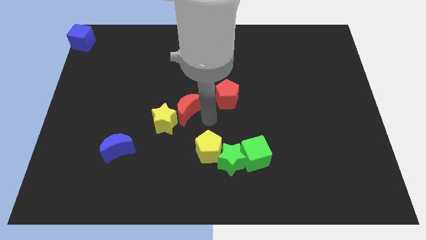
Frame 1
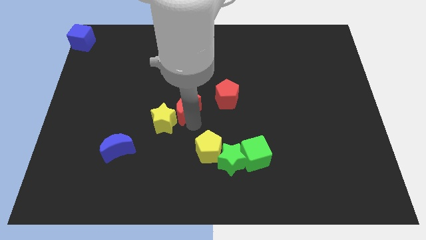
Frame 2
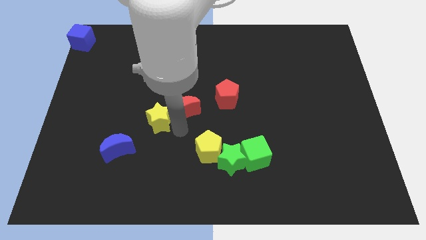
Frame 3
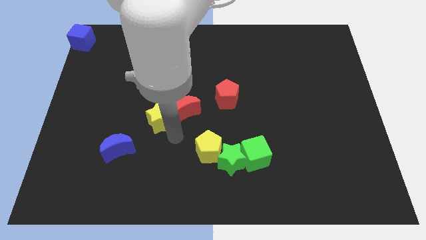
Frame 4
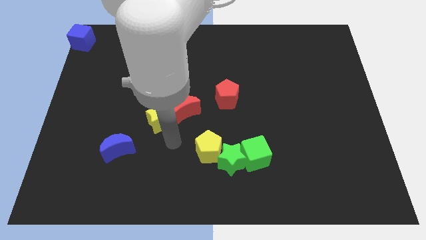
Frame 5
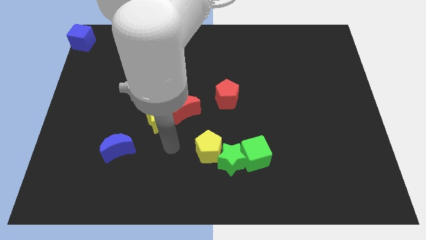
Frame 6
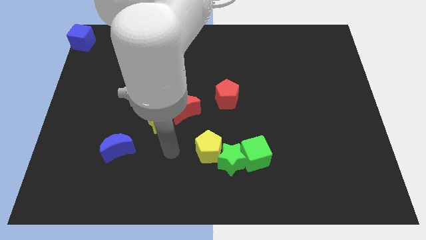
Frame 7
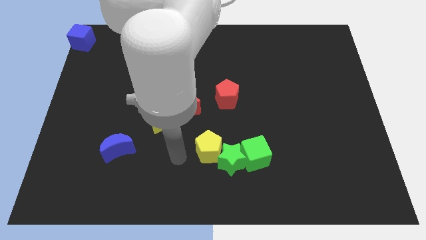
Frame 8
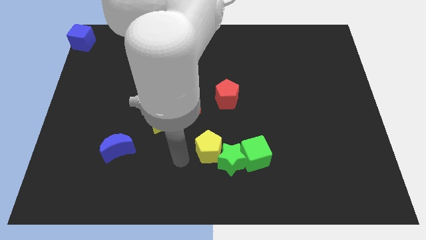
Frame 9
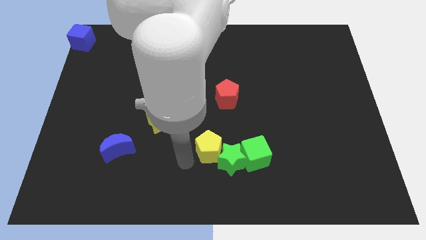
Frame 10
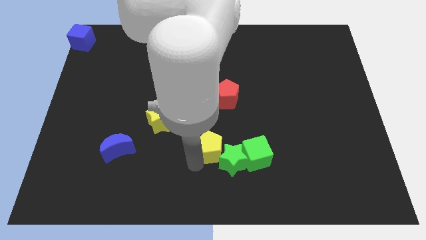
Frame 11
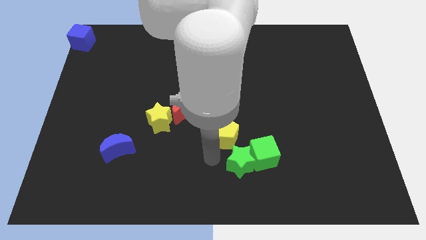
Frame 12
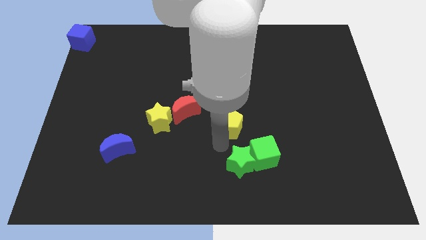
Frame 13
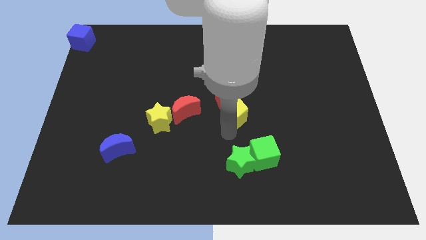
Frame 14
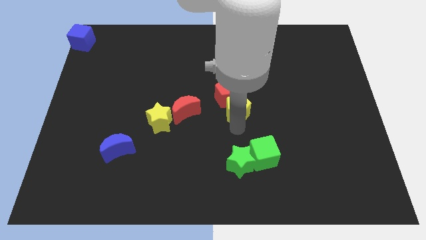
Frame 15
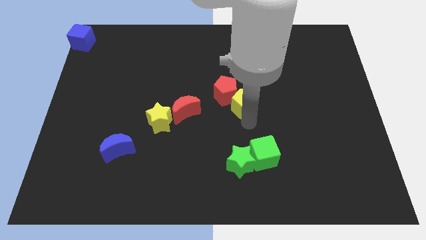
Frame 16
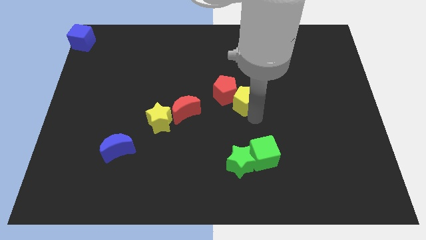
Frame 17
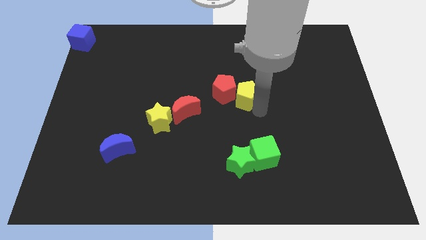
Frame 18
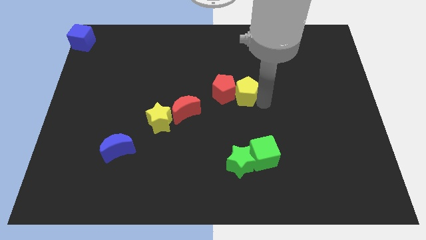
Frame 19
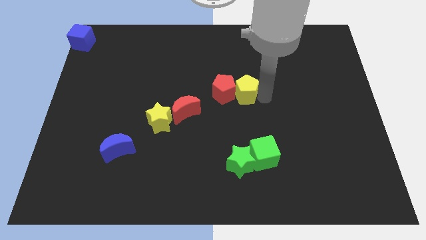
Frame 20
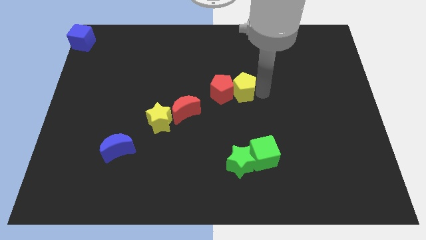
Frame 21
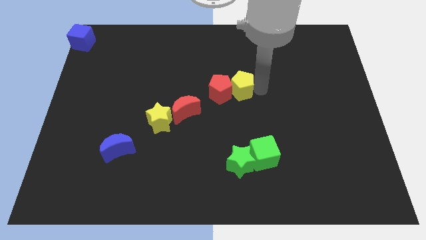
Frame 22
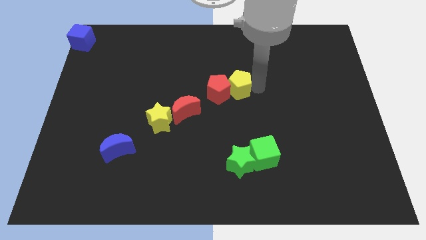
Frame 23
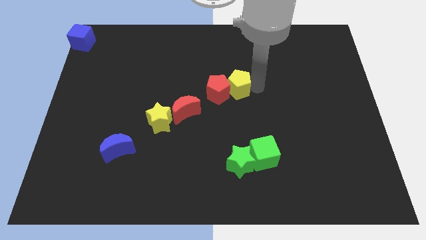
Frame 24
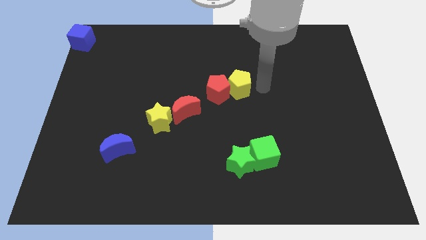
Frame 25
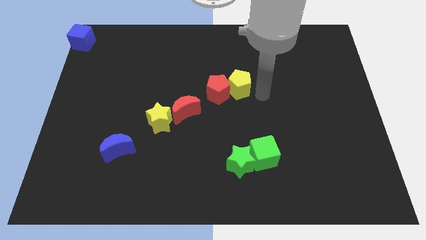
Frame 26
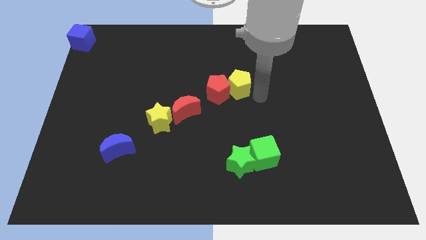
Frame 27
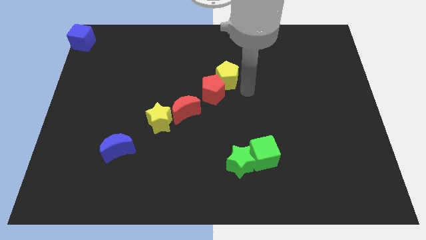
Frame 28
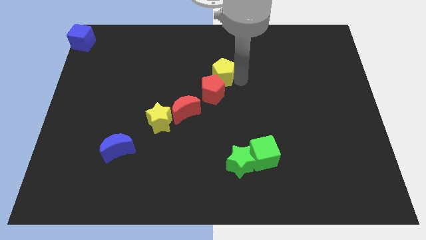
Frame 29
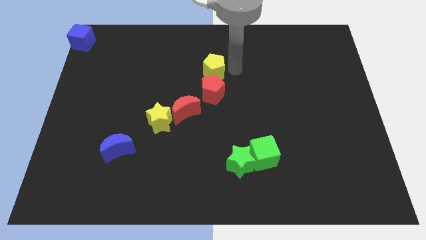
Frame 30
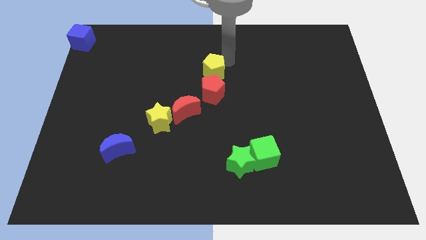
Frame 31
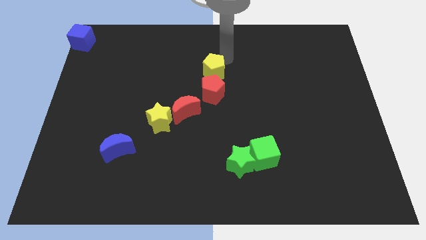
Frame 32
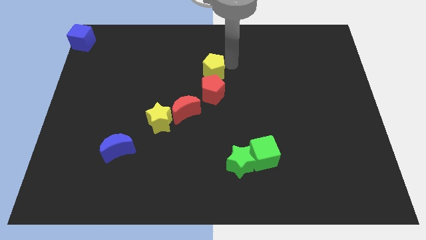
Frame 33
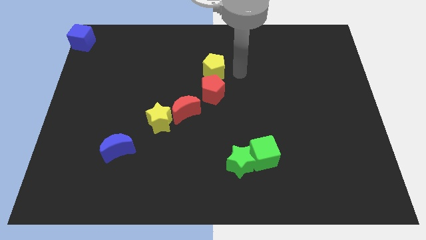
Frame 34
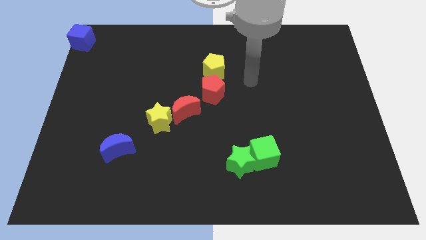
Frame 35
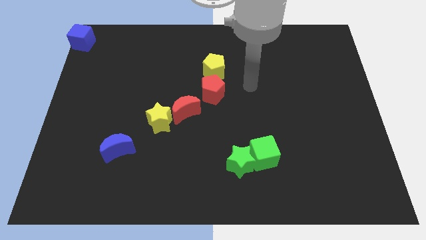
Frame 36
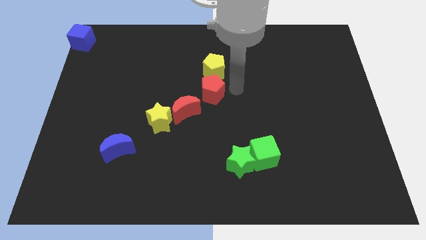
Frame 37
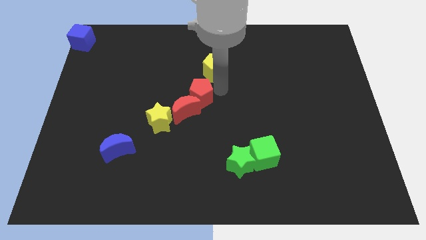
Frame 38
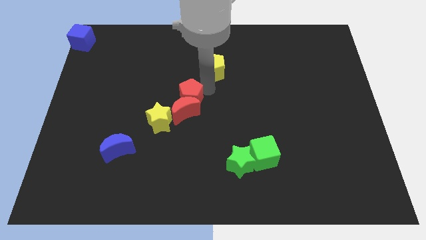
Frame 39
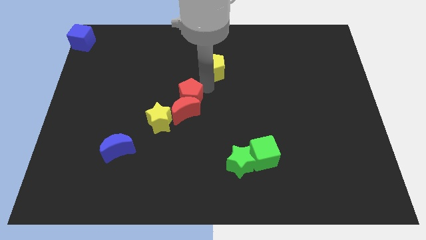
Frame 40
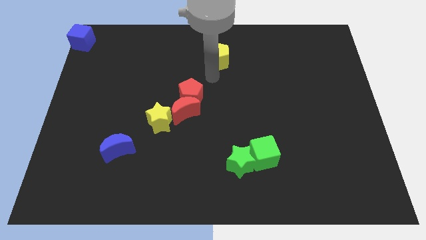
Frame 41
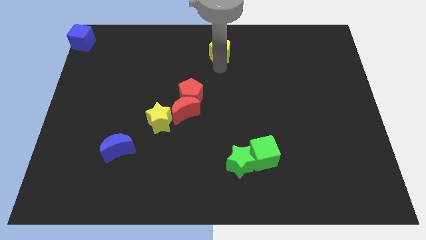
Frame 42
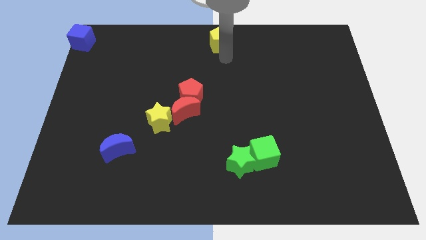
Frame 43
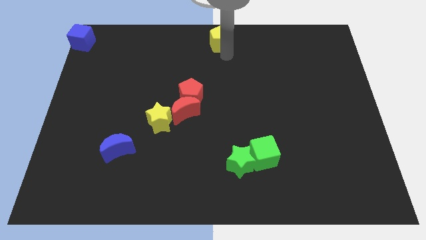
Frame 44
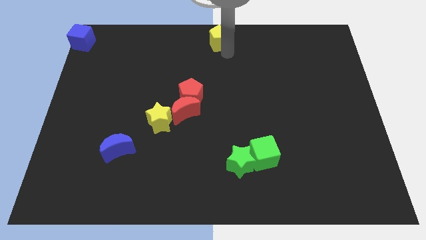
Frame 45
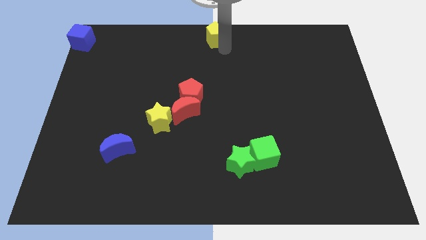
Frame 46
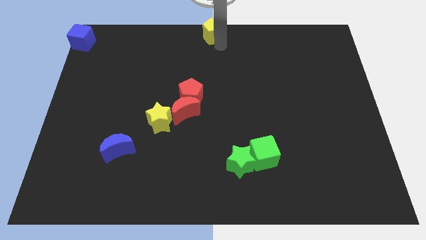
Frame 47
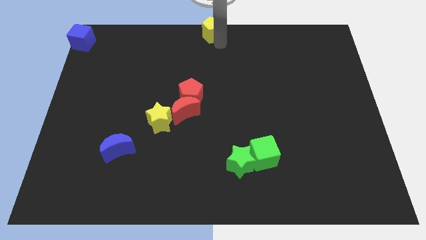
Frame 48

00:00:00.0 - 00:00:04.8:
move the yellow pentagon to the top center of the board

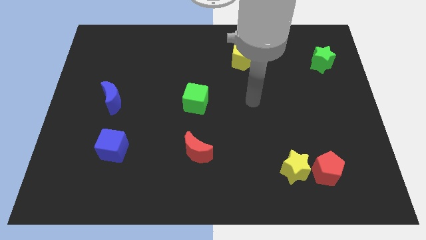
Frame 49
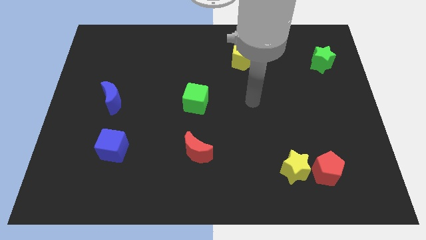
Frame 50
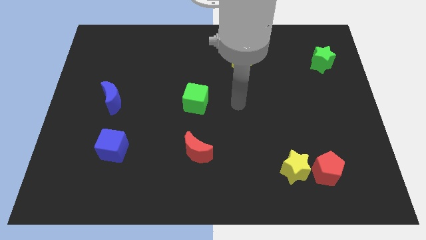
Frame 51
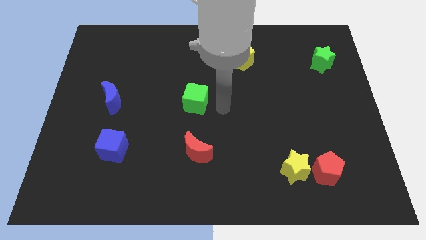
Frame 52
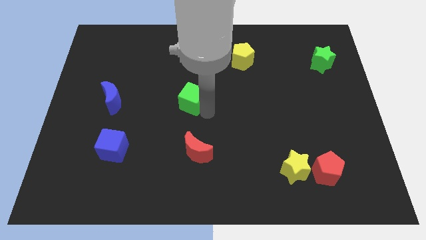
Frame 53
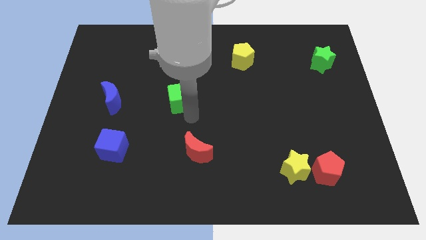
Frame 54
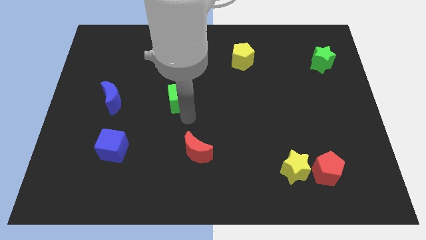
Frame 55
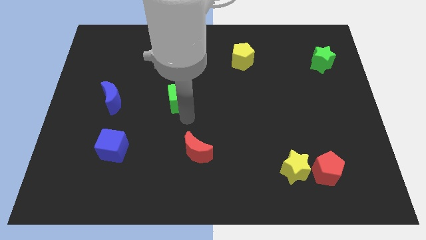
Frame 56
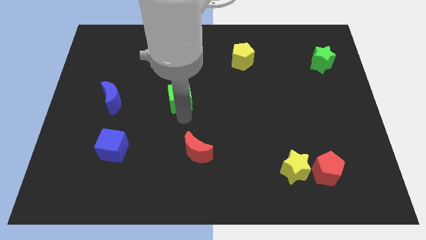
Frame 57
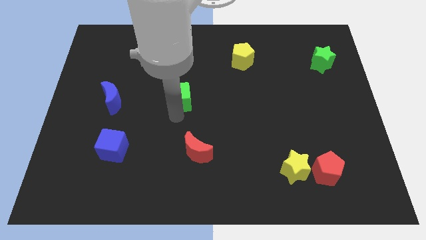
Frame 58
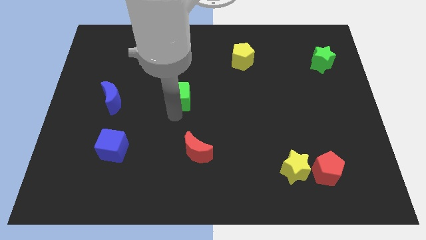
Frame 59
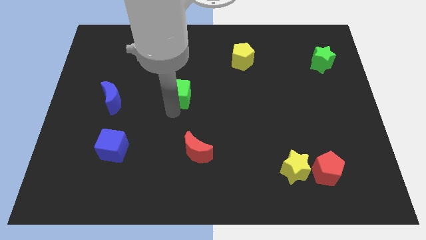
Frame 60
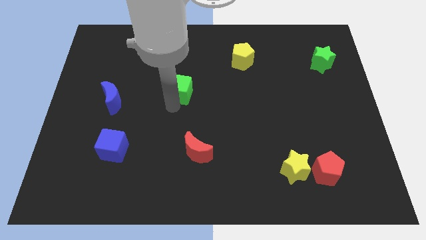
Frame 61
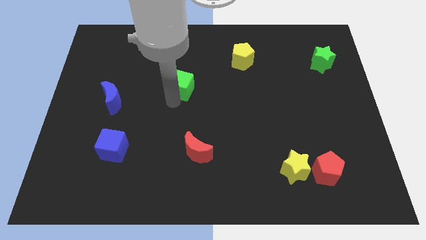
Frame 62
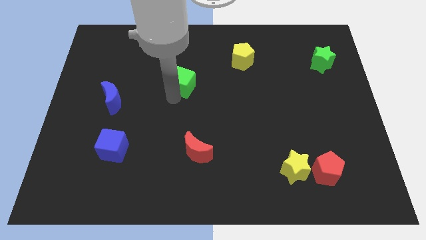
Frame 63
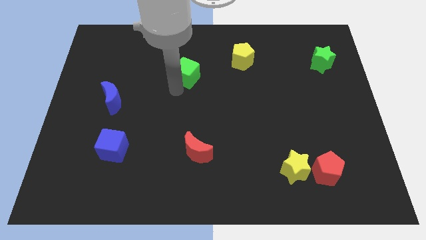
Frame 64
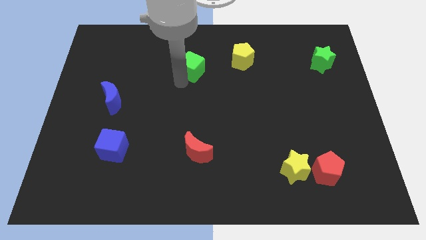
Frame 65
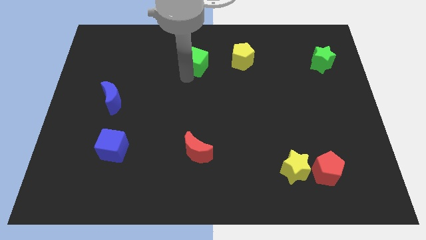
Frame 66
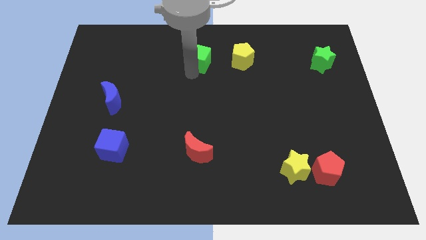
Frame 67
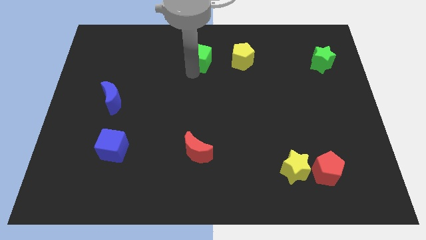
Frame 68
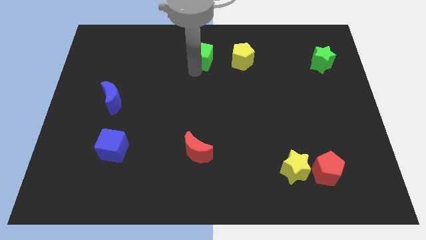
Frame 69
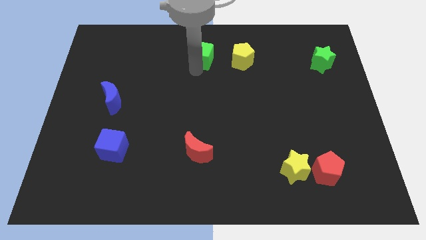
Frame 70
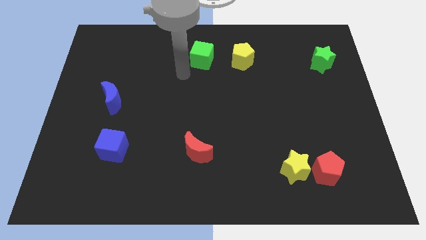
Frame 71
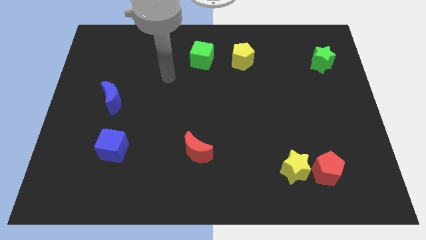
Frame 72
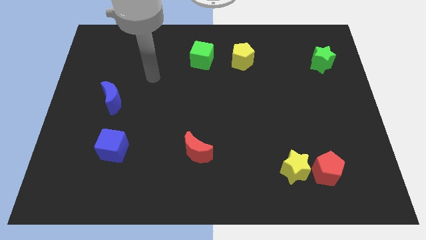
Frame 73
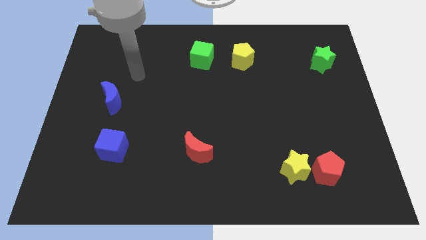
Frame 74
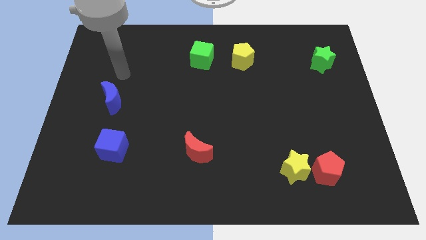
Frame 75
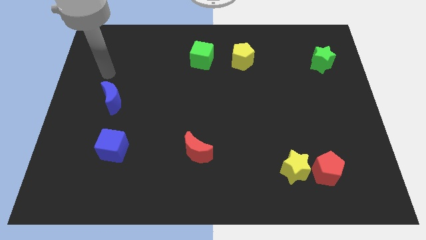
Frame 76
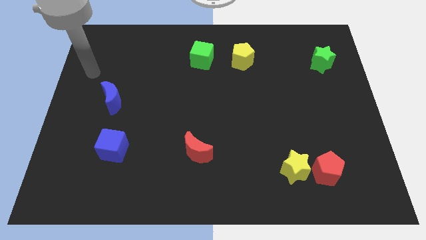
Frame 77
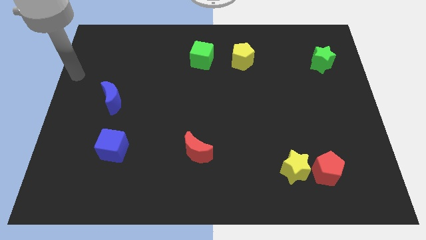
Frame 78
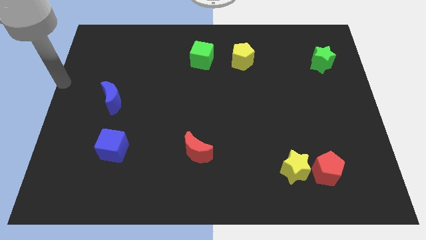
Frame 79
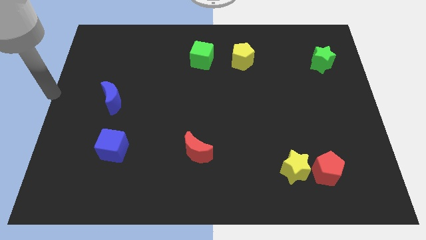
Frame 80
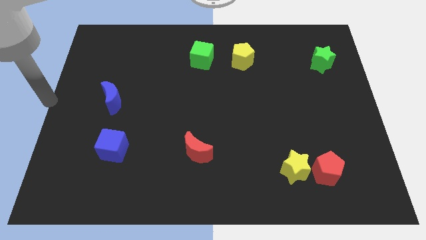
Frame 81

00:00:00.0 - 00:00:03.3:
move the green cube to the left side of the yellow pentagon

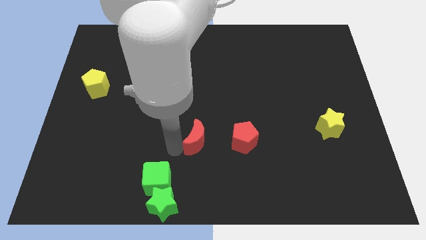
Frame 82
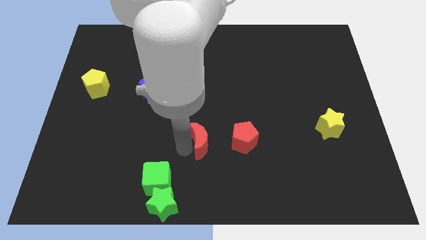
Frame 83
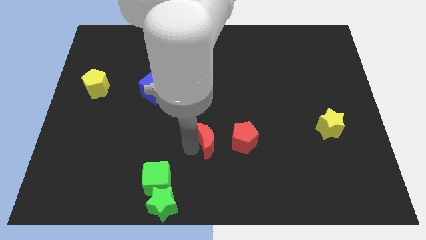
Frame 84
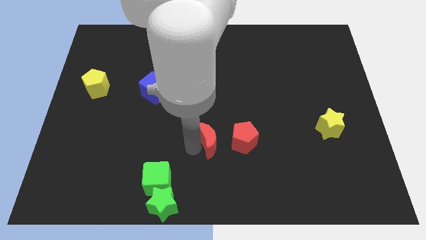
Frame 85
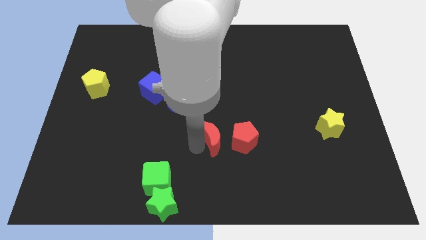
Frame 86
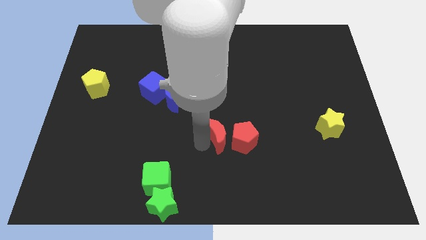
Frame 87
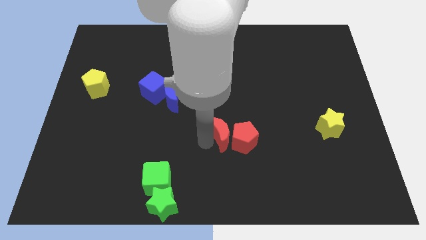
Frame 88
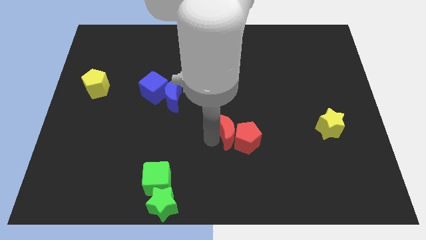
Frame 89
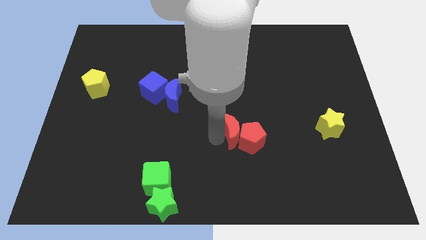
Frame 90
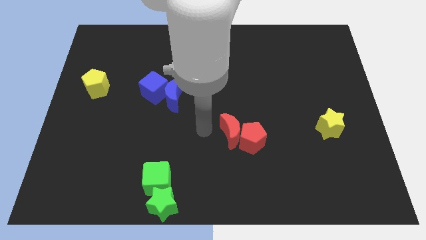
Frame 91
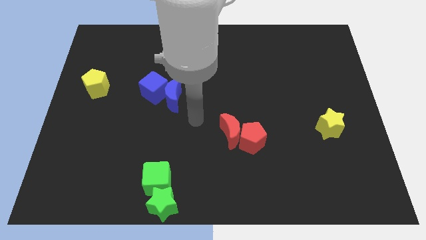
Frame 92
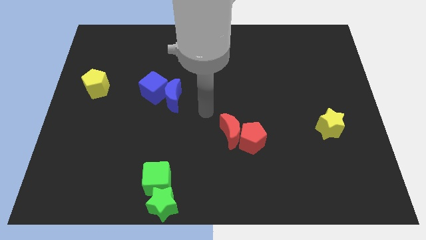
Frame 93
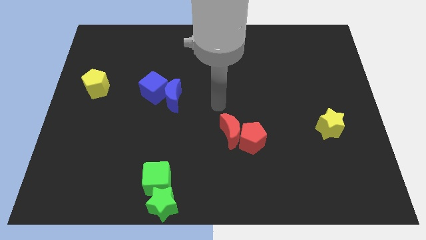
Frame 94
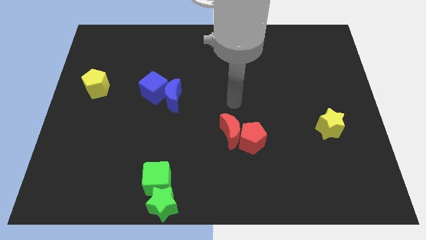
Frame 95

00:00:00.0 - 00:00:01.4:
slightly push the red blocks towards the right side of the board
